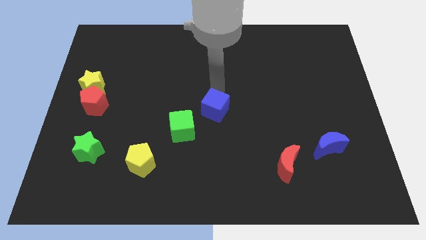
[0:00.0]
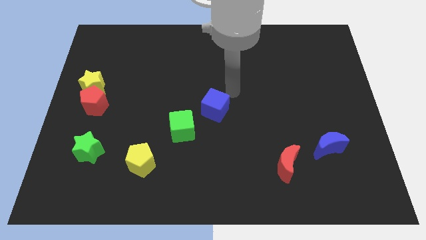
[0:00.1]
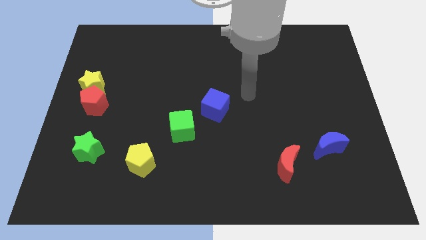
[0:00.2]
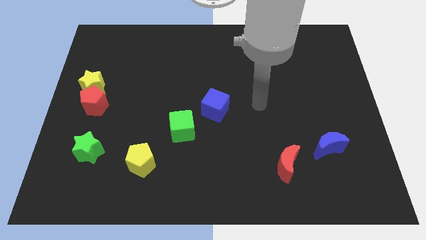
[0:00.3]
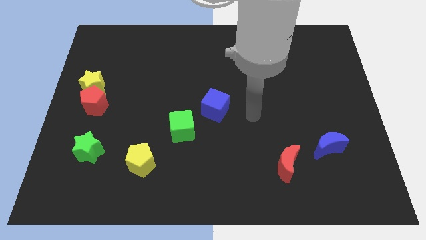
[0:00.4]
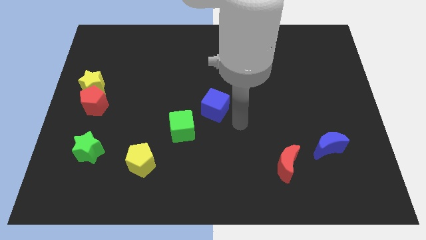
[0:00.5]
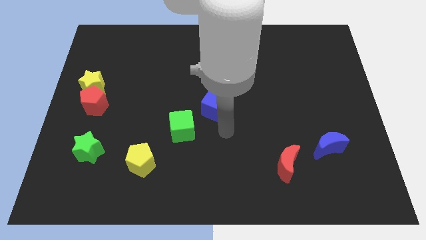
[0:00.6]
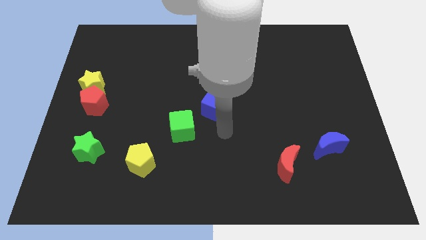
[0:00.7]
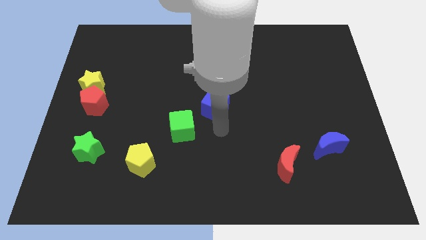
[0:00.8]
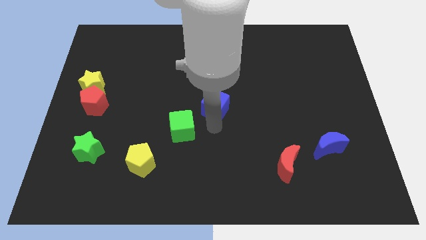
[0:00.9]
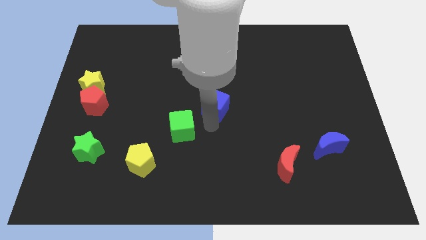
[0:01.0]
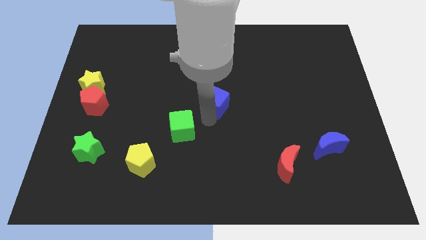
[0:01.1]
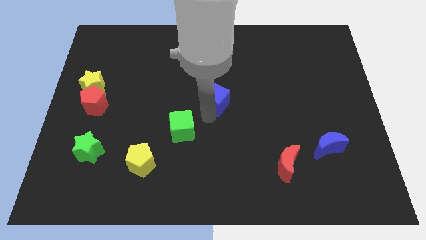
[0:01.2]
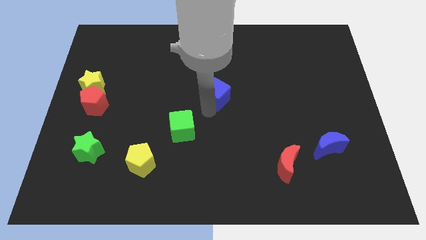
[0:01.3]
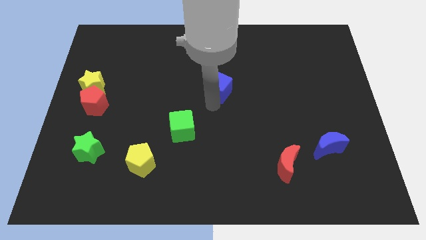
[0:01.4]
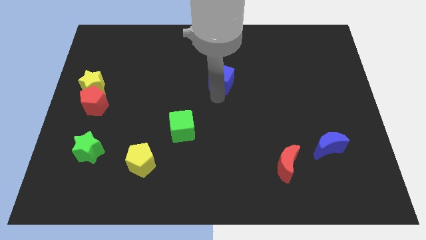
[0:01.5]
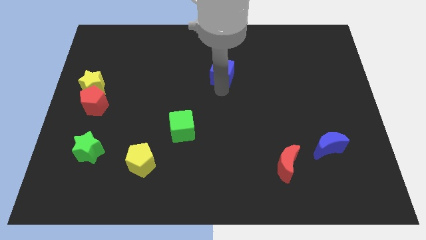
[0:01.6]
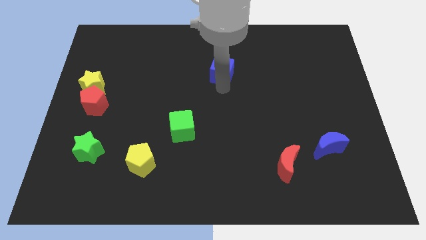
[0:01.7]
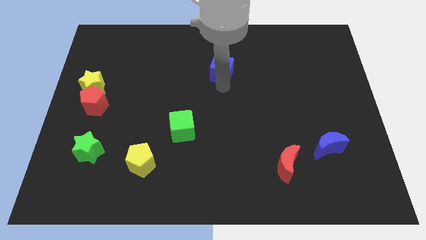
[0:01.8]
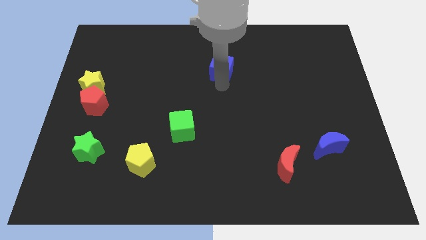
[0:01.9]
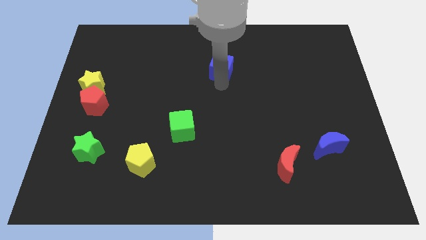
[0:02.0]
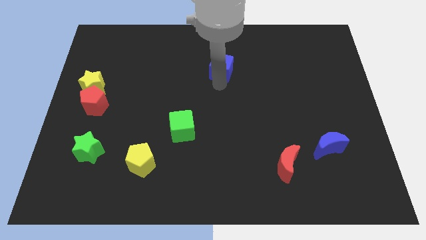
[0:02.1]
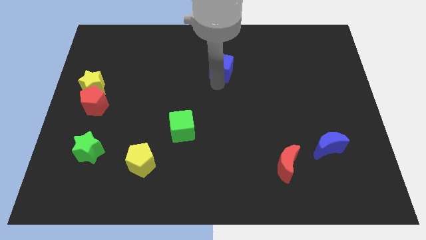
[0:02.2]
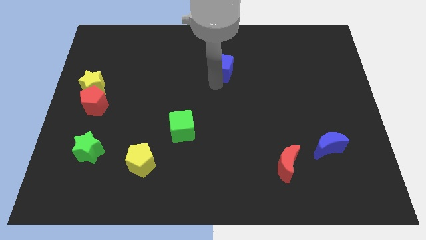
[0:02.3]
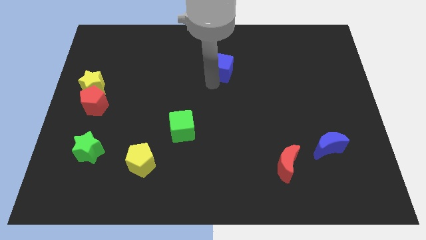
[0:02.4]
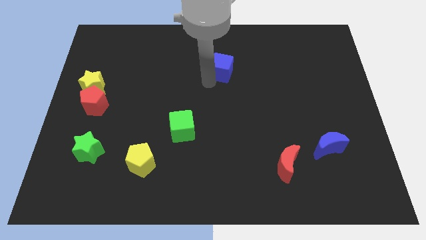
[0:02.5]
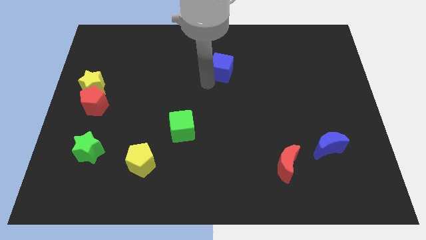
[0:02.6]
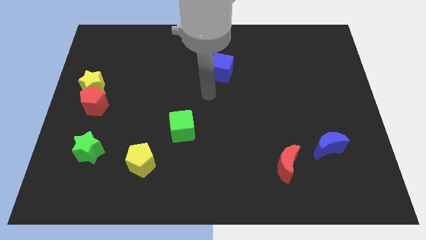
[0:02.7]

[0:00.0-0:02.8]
move blue cube upwards

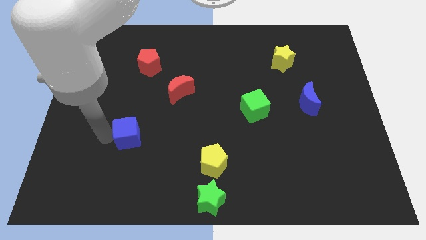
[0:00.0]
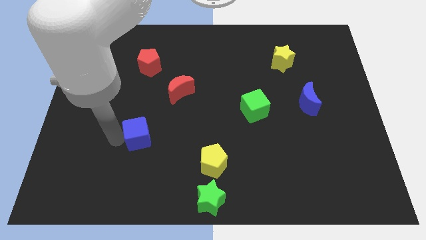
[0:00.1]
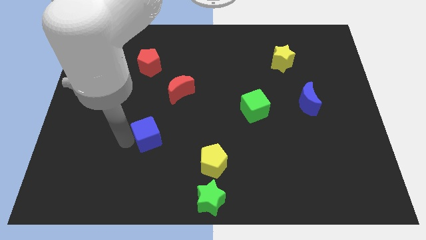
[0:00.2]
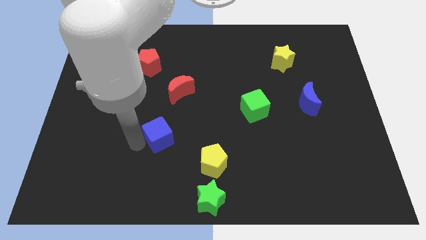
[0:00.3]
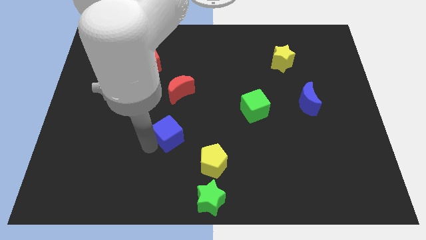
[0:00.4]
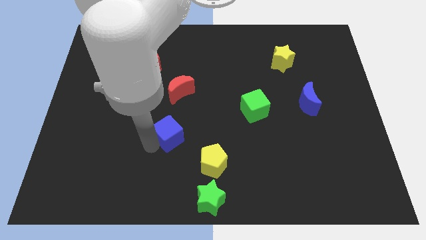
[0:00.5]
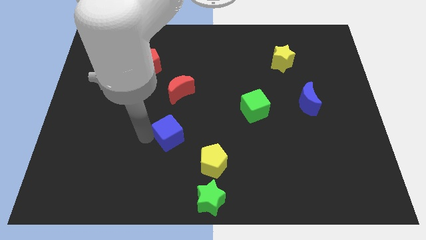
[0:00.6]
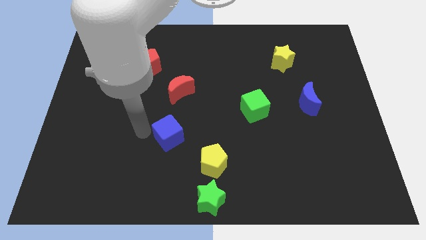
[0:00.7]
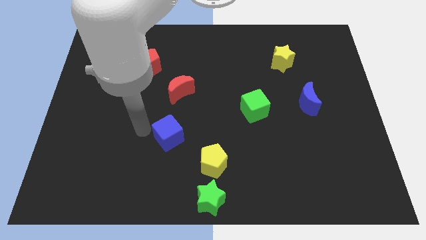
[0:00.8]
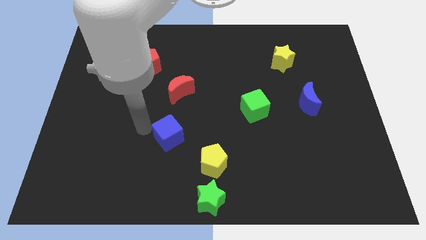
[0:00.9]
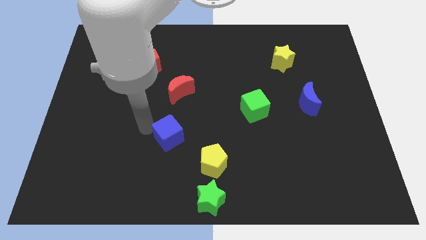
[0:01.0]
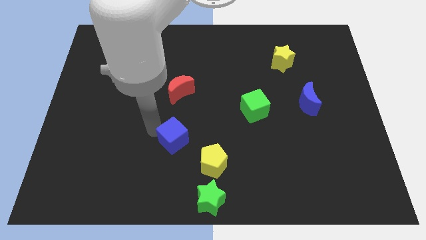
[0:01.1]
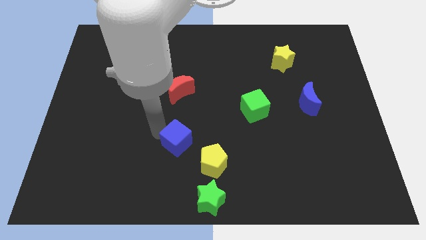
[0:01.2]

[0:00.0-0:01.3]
push the blue cube to the bottom of the red crescent

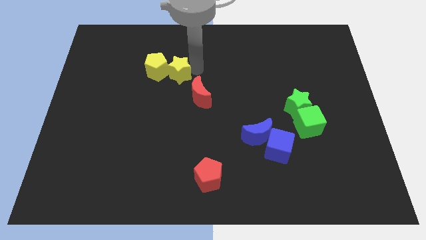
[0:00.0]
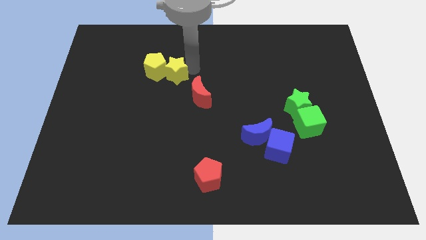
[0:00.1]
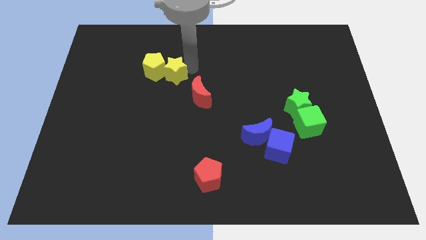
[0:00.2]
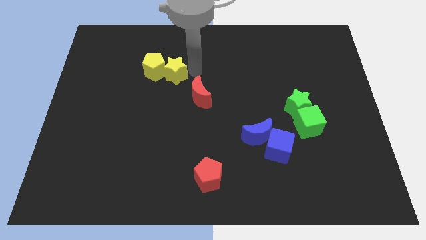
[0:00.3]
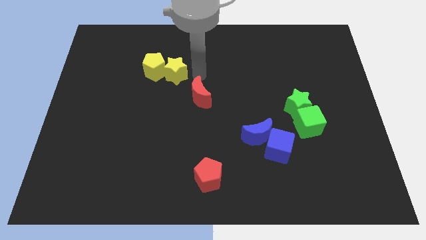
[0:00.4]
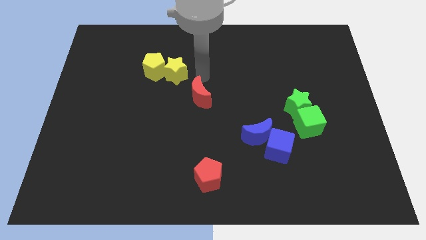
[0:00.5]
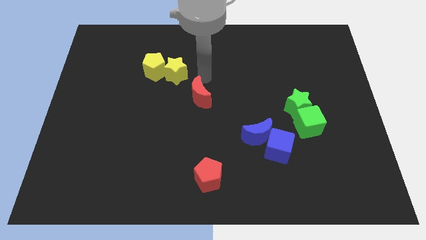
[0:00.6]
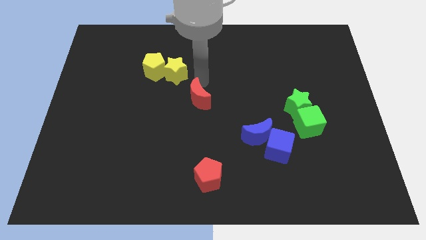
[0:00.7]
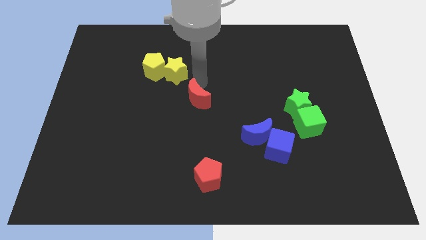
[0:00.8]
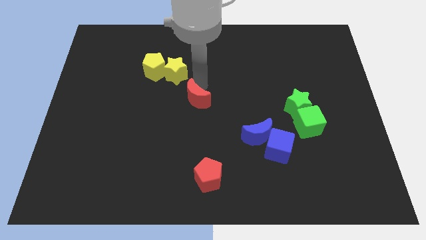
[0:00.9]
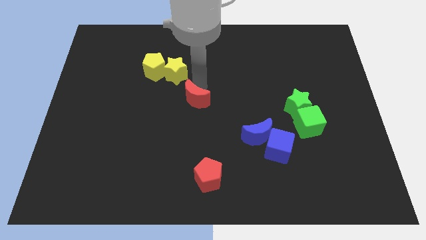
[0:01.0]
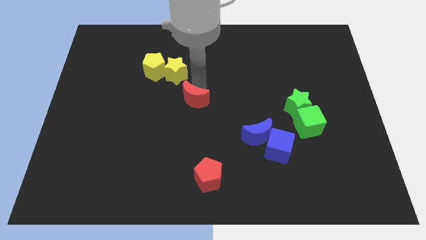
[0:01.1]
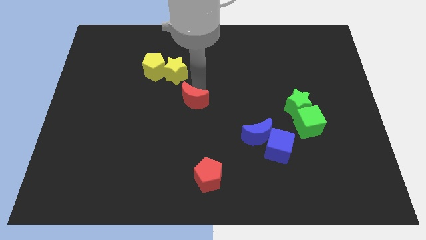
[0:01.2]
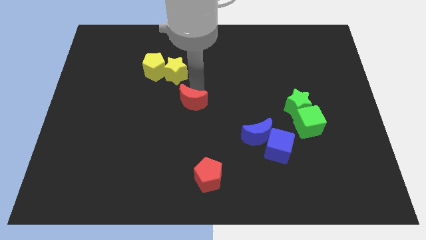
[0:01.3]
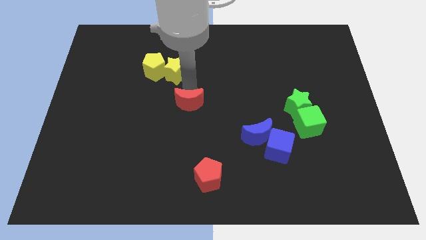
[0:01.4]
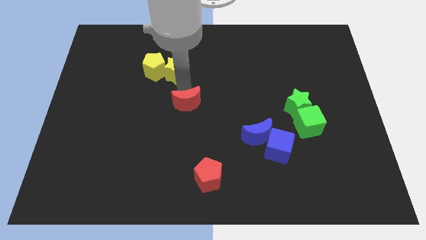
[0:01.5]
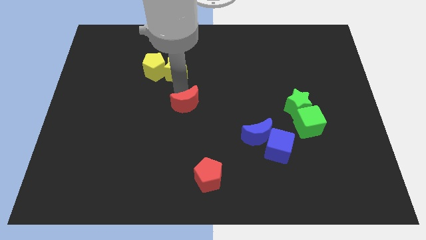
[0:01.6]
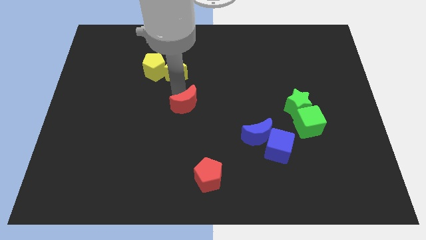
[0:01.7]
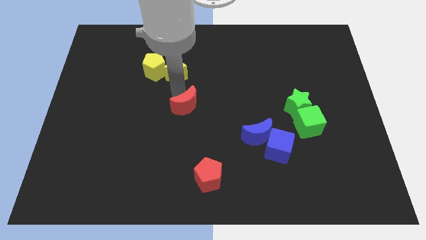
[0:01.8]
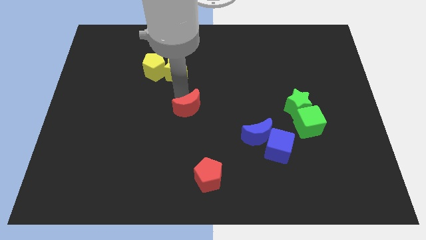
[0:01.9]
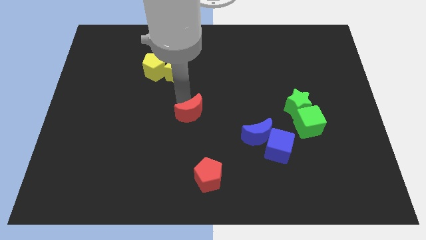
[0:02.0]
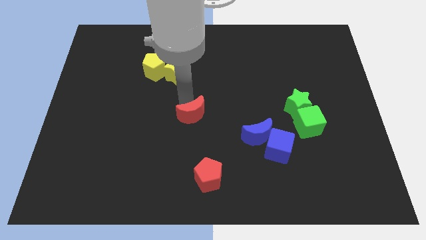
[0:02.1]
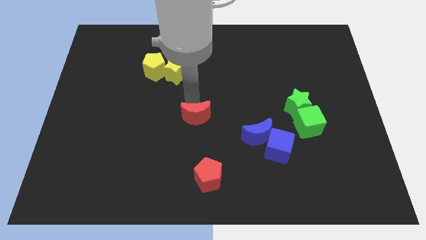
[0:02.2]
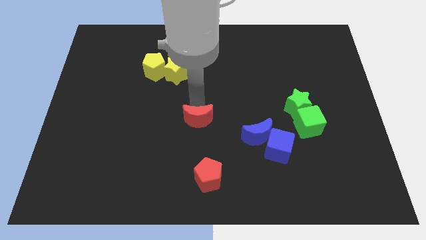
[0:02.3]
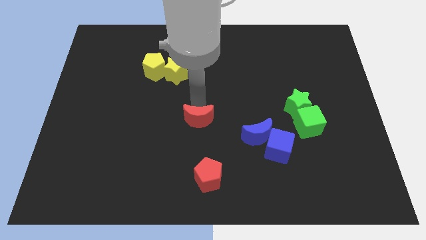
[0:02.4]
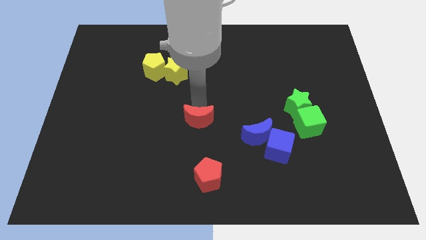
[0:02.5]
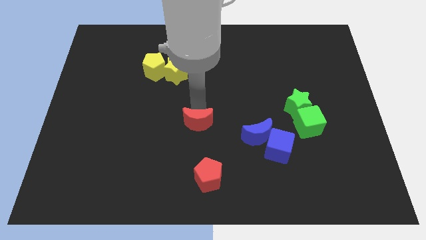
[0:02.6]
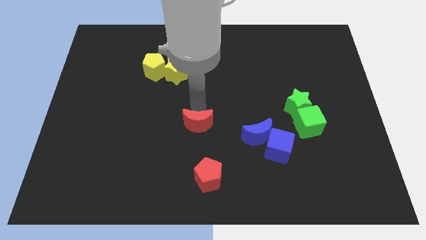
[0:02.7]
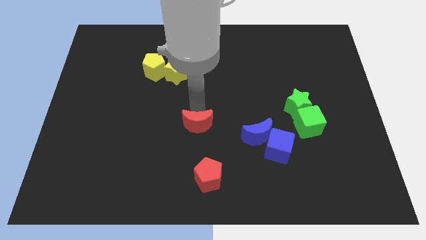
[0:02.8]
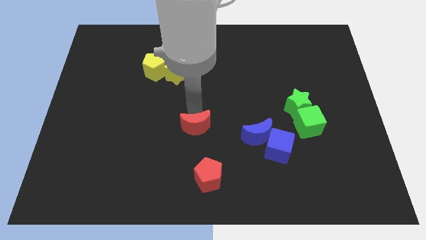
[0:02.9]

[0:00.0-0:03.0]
slide the red crescent to the center of the board

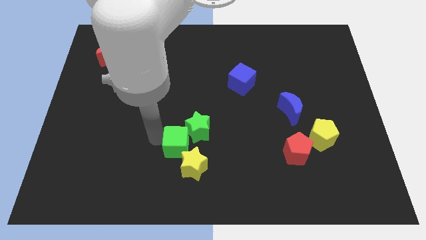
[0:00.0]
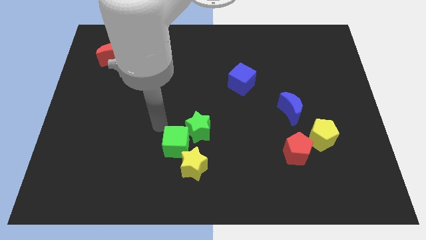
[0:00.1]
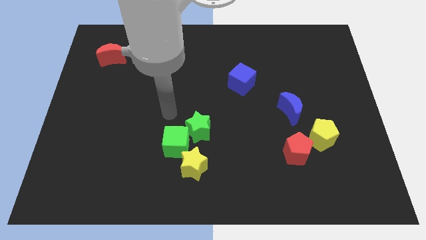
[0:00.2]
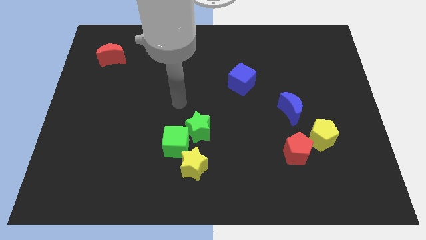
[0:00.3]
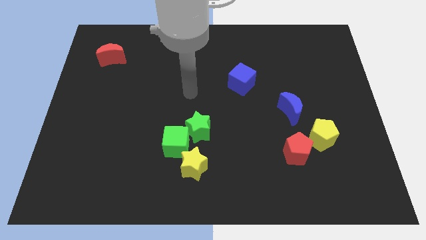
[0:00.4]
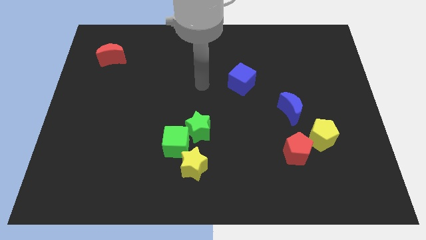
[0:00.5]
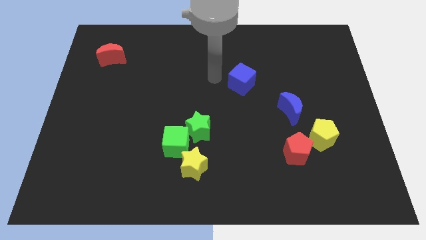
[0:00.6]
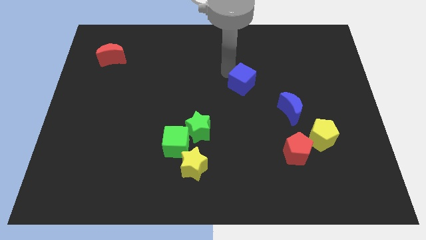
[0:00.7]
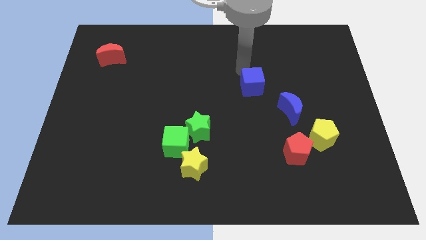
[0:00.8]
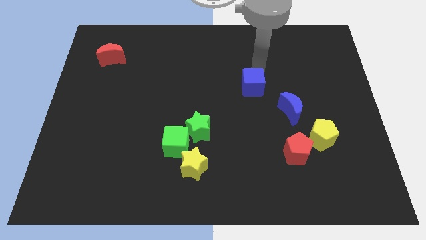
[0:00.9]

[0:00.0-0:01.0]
place your arm to the top of blue cube

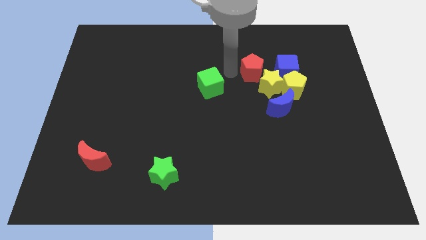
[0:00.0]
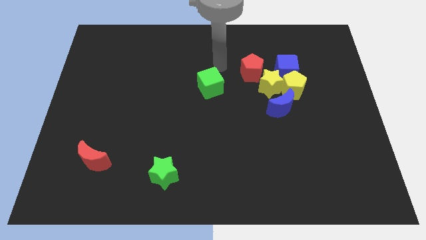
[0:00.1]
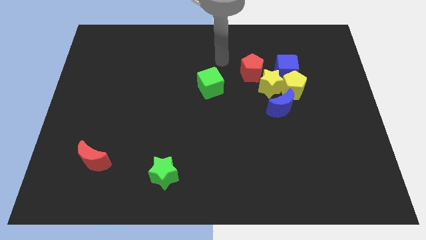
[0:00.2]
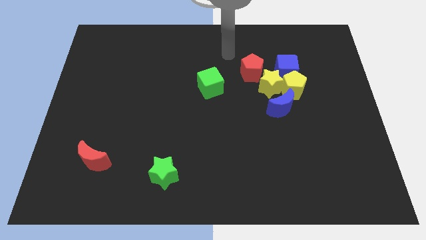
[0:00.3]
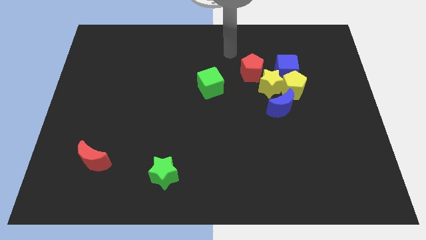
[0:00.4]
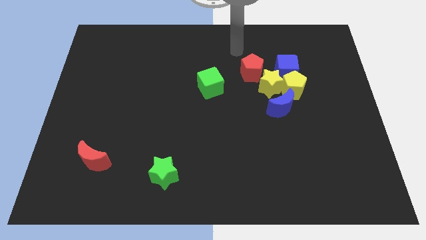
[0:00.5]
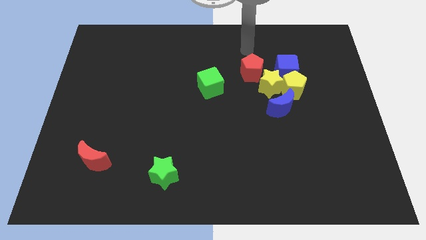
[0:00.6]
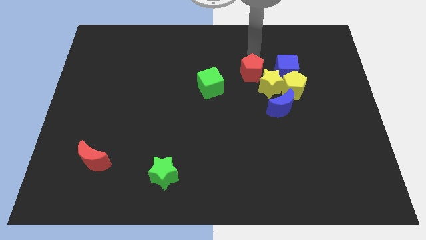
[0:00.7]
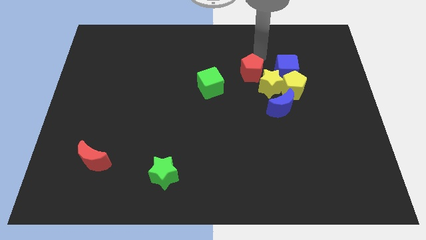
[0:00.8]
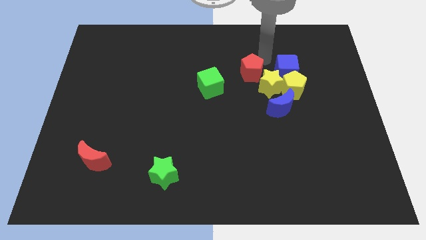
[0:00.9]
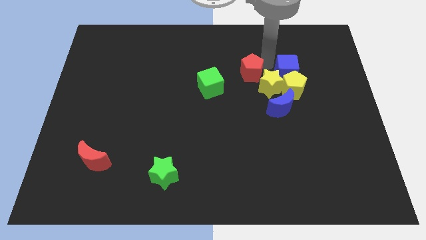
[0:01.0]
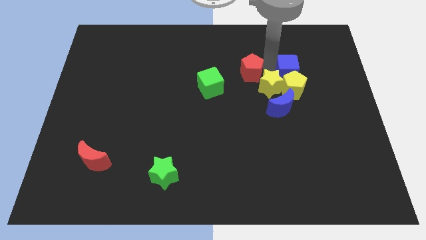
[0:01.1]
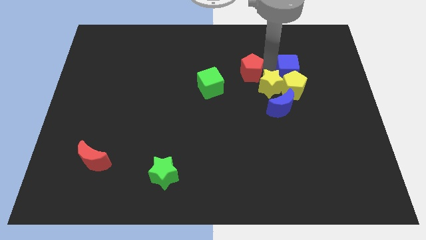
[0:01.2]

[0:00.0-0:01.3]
point your hand in between the red pentagon and blue cube
